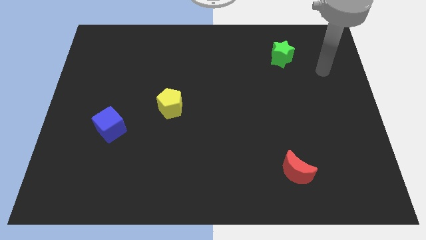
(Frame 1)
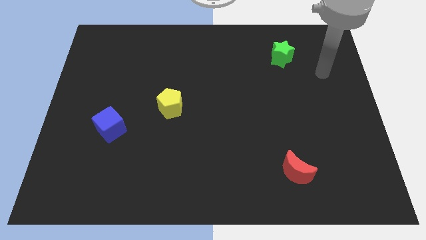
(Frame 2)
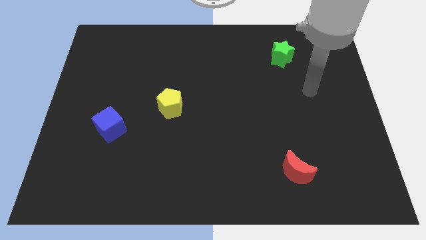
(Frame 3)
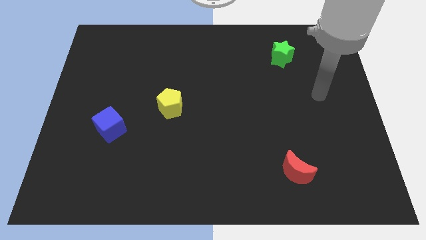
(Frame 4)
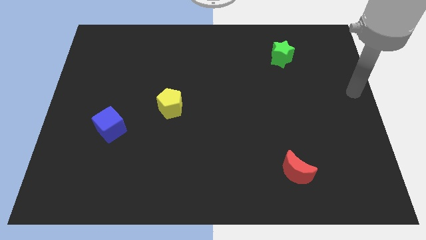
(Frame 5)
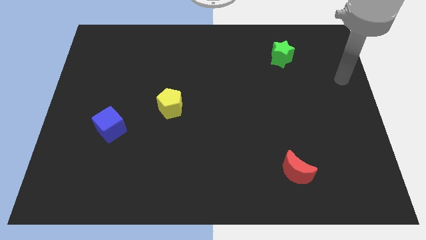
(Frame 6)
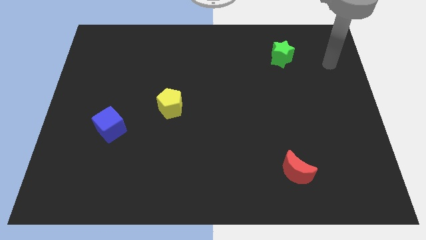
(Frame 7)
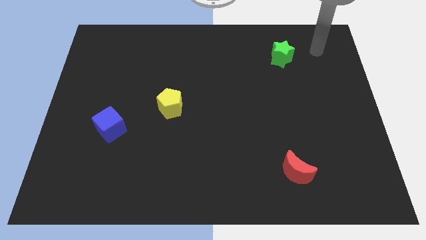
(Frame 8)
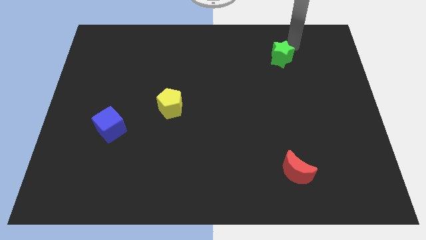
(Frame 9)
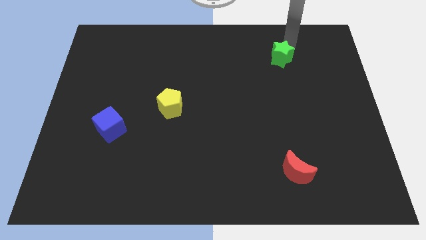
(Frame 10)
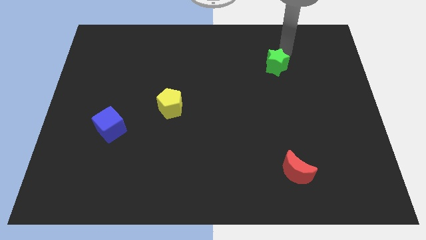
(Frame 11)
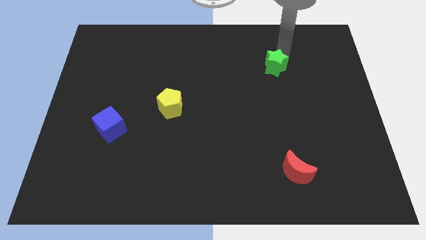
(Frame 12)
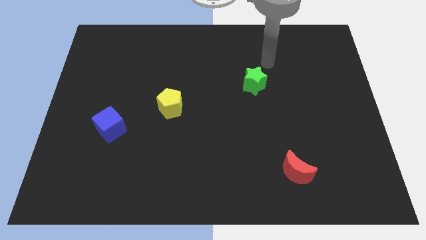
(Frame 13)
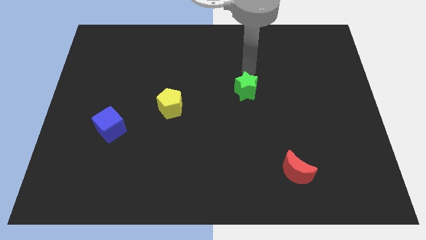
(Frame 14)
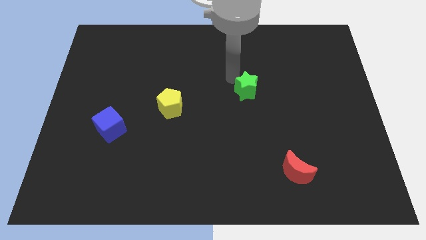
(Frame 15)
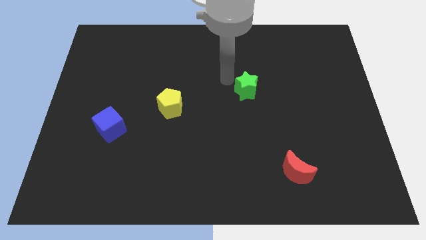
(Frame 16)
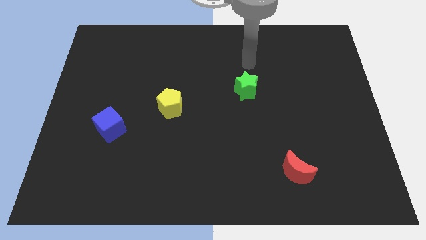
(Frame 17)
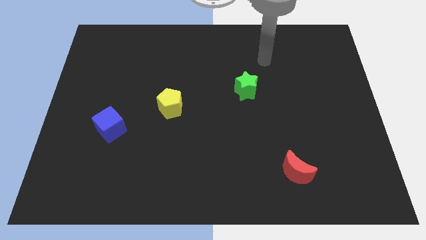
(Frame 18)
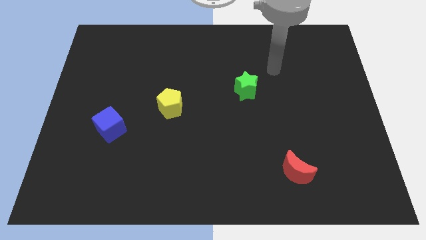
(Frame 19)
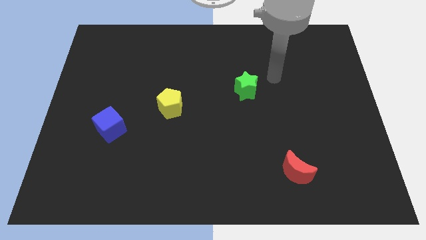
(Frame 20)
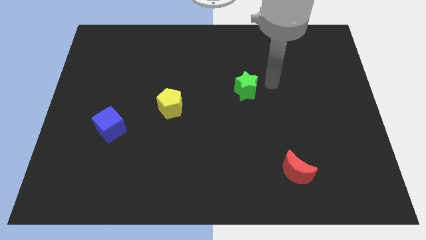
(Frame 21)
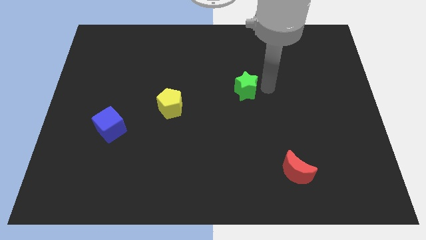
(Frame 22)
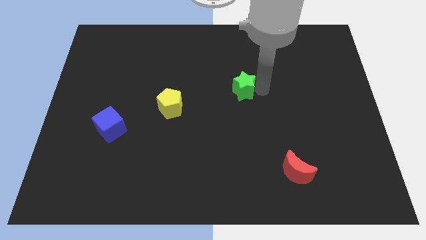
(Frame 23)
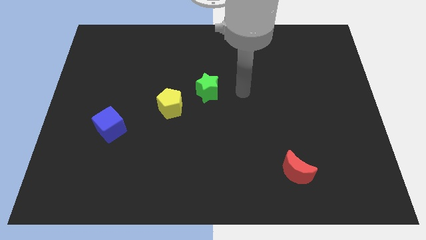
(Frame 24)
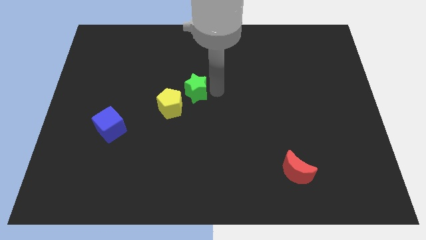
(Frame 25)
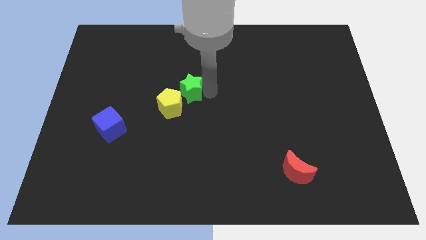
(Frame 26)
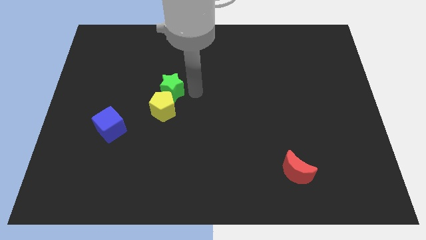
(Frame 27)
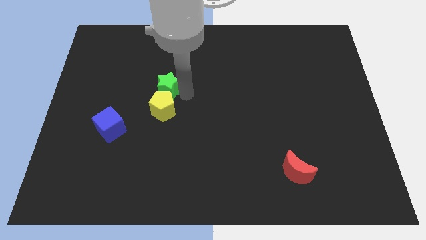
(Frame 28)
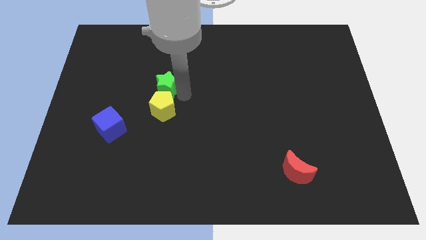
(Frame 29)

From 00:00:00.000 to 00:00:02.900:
slide the green star towards the yellow pentagon

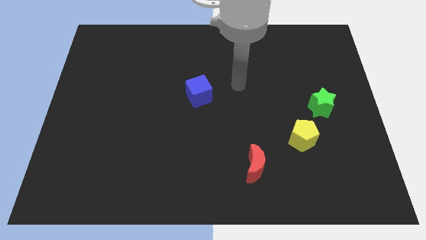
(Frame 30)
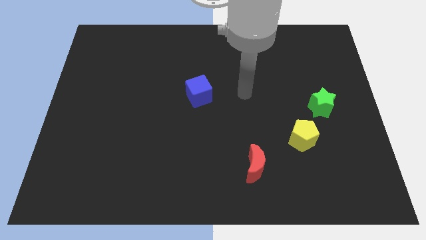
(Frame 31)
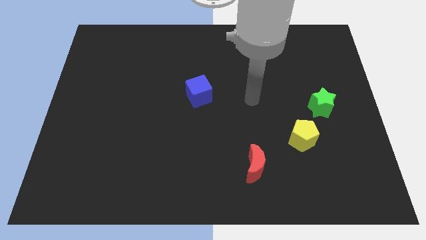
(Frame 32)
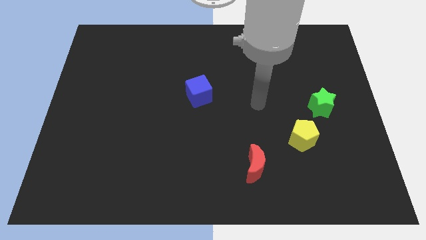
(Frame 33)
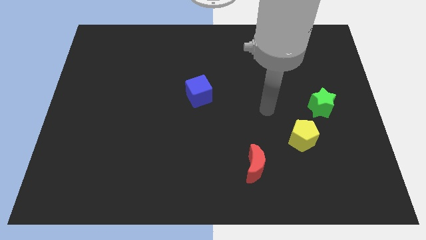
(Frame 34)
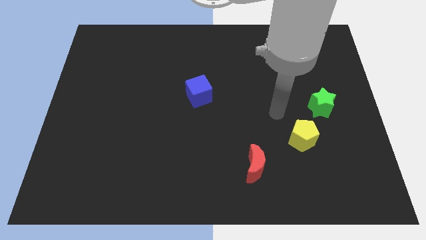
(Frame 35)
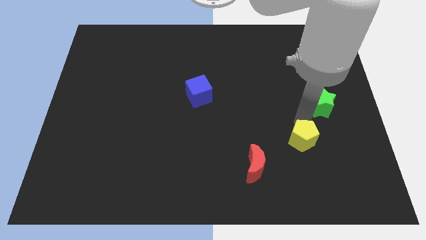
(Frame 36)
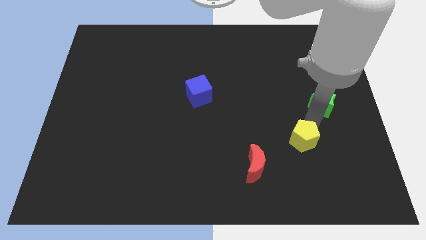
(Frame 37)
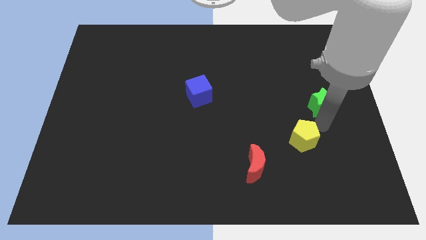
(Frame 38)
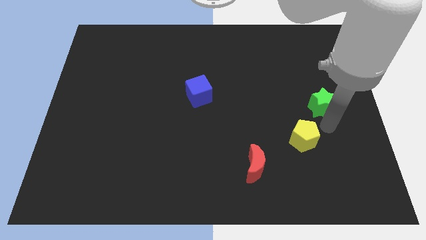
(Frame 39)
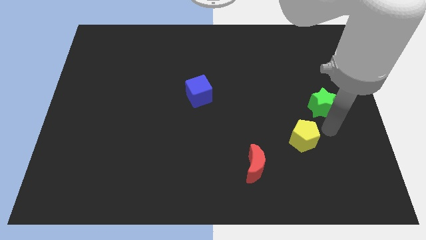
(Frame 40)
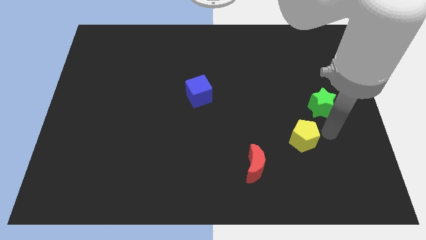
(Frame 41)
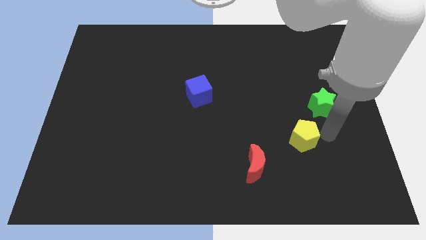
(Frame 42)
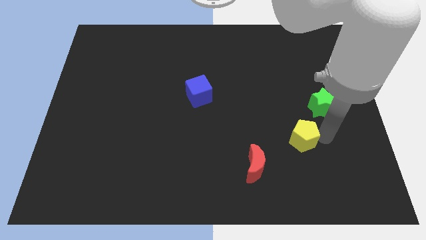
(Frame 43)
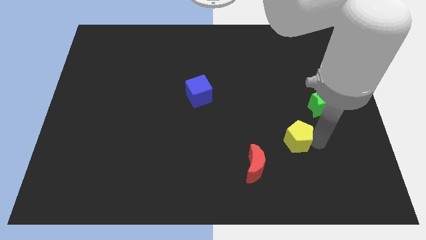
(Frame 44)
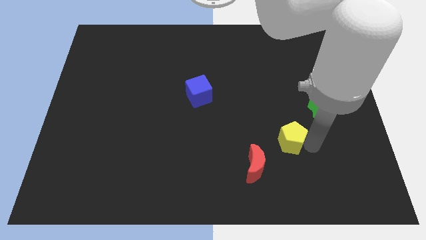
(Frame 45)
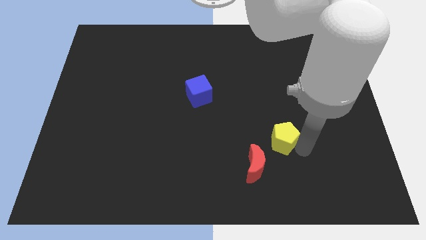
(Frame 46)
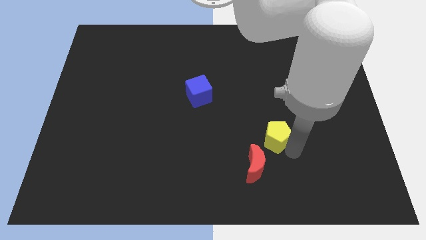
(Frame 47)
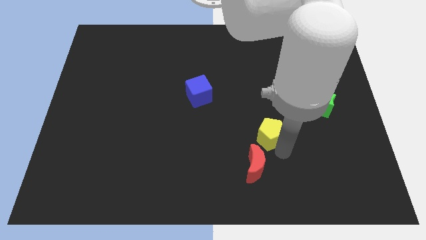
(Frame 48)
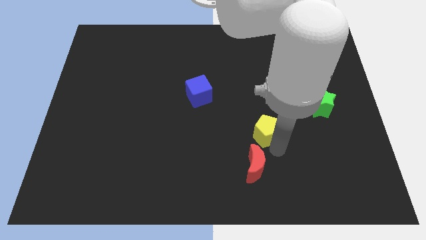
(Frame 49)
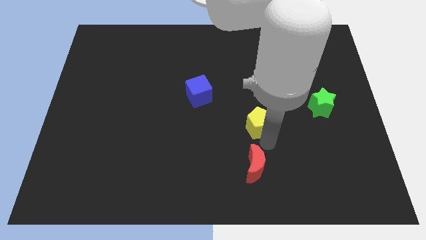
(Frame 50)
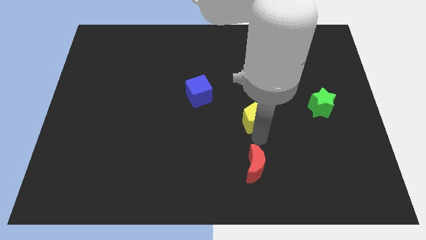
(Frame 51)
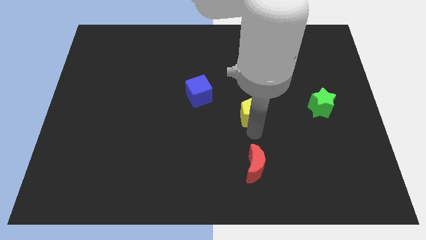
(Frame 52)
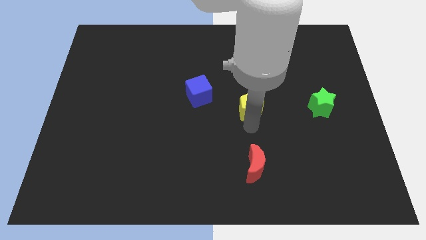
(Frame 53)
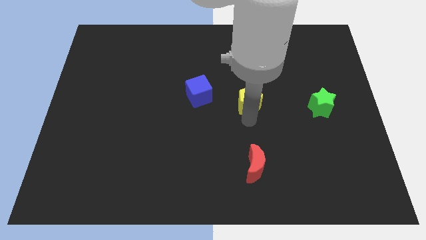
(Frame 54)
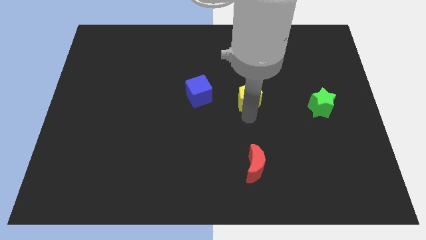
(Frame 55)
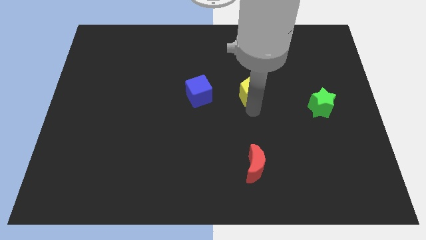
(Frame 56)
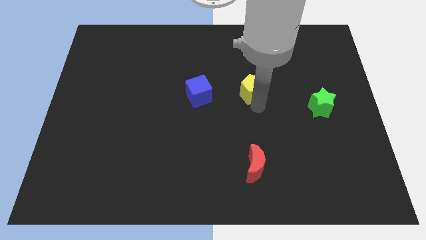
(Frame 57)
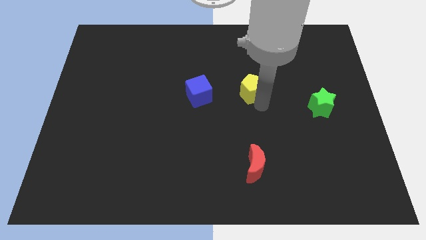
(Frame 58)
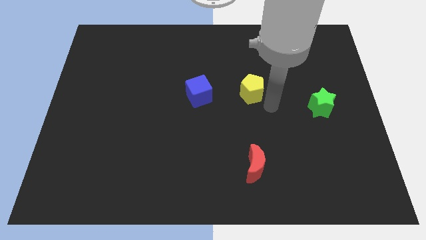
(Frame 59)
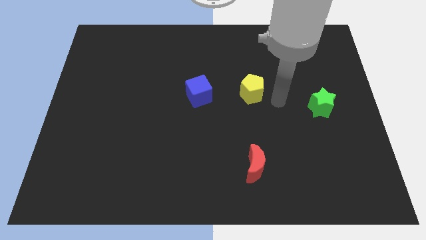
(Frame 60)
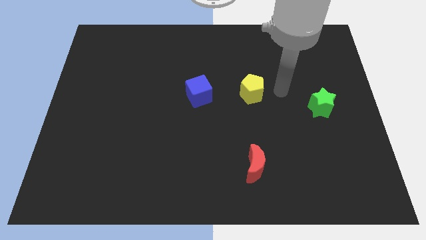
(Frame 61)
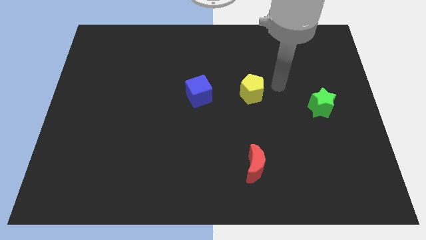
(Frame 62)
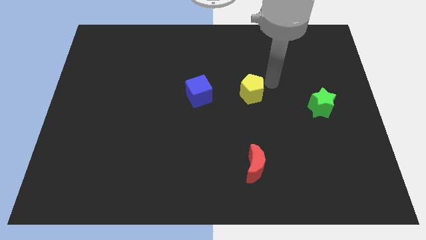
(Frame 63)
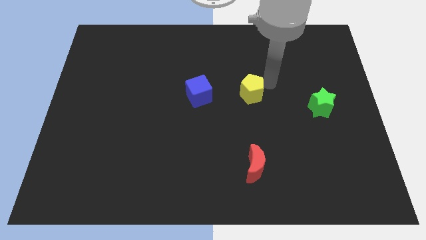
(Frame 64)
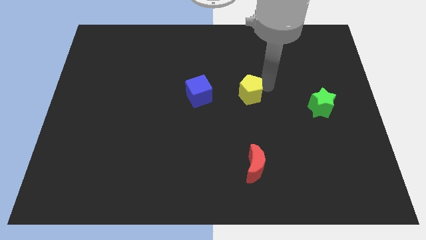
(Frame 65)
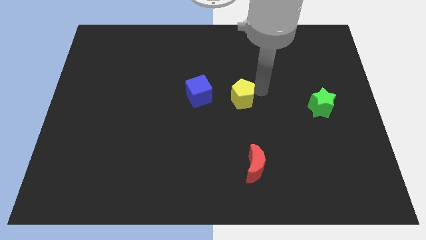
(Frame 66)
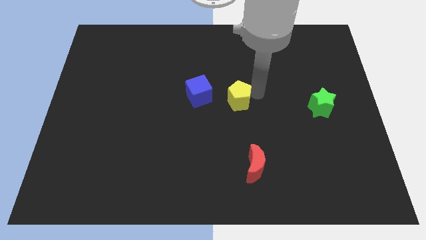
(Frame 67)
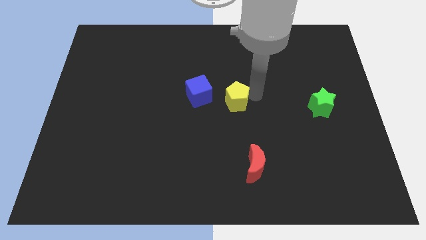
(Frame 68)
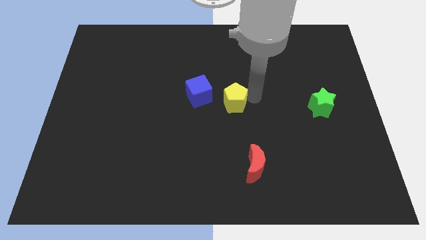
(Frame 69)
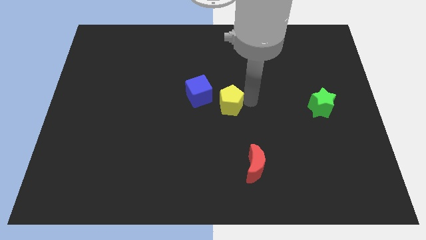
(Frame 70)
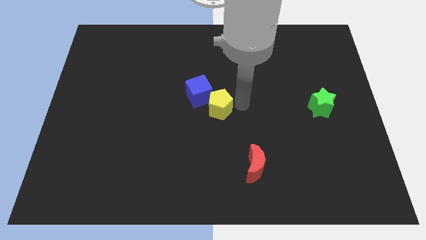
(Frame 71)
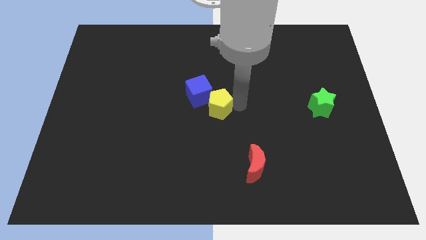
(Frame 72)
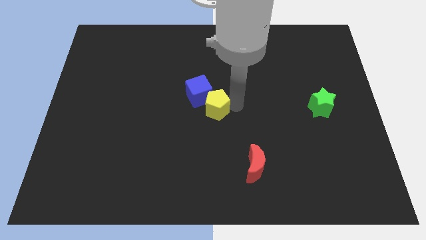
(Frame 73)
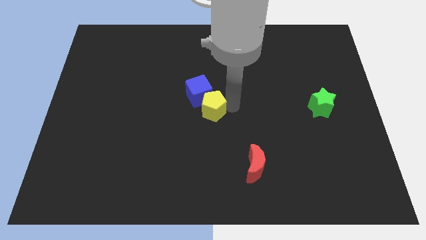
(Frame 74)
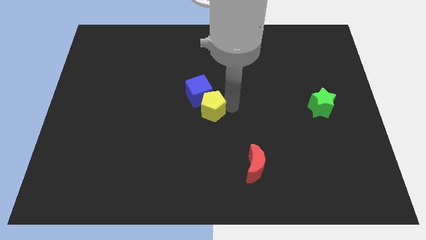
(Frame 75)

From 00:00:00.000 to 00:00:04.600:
push the pentagon towards the blue block

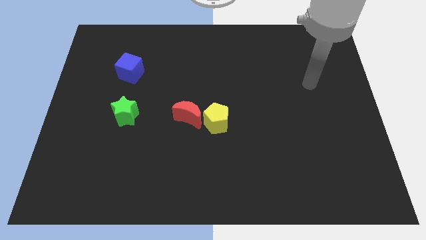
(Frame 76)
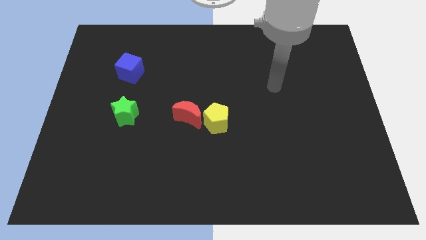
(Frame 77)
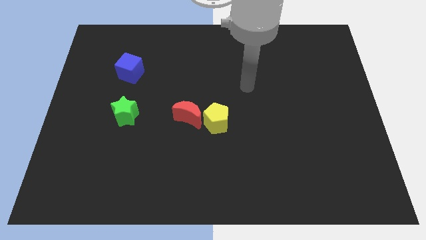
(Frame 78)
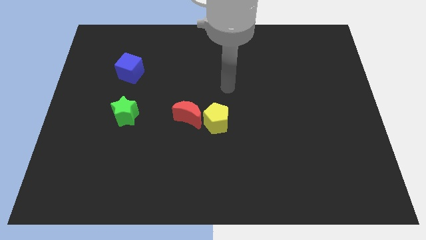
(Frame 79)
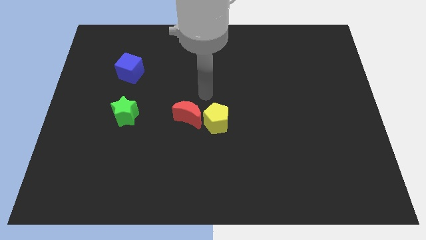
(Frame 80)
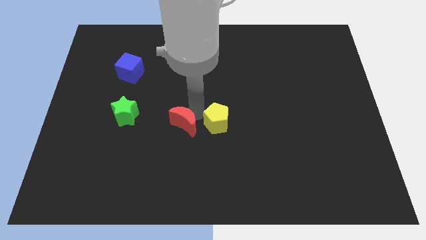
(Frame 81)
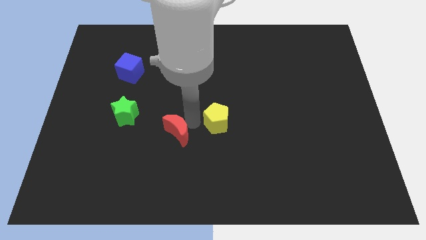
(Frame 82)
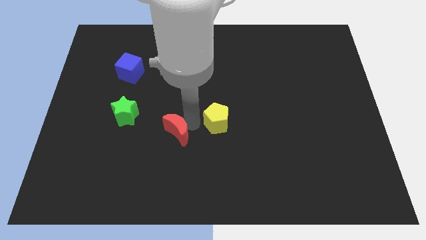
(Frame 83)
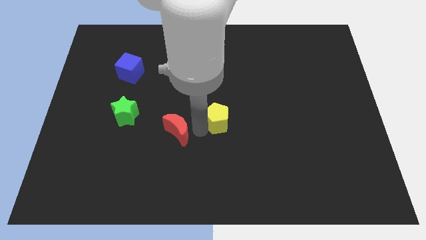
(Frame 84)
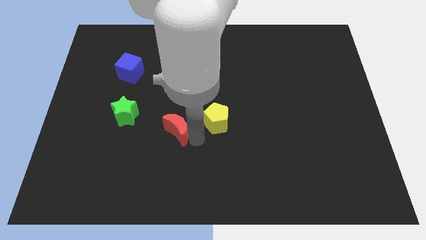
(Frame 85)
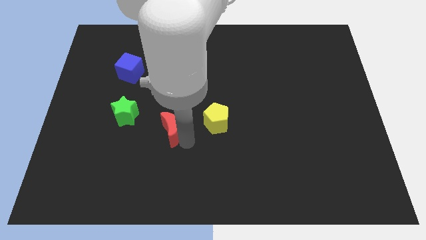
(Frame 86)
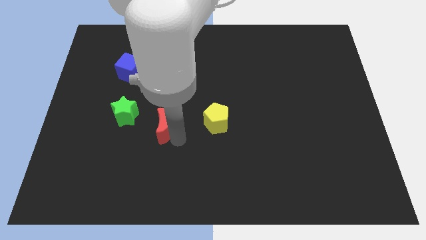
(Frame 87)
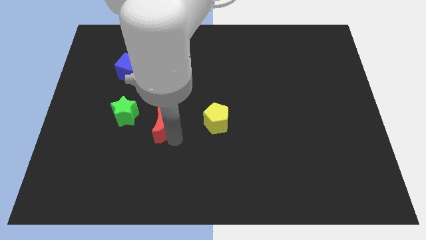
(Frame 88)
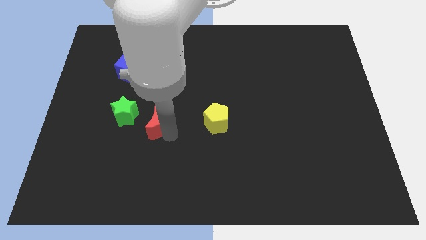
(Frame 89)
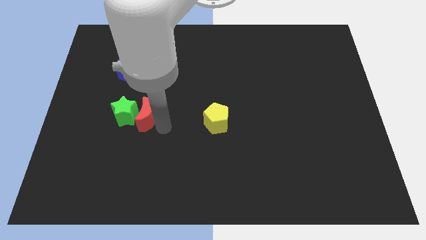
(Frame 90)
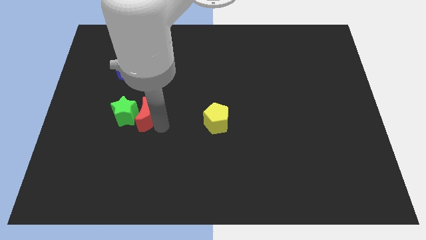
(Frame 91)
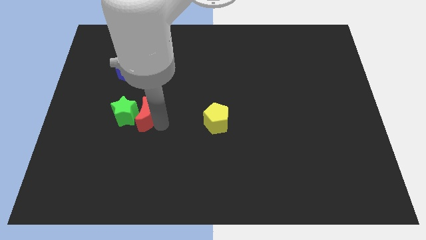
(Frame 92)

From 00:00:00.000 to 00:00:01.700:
slide the moon next to the star
